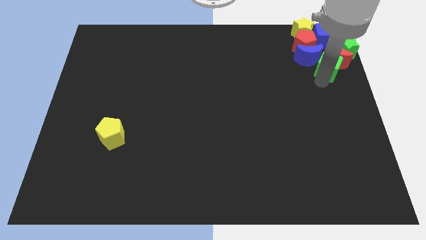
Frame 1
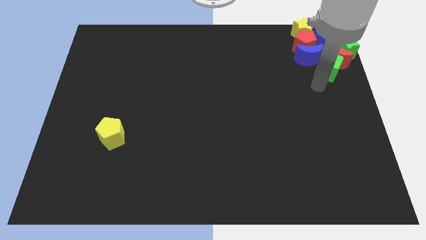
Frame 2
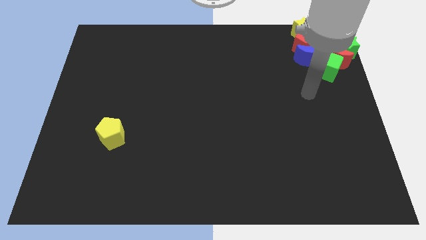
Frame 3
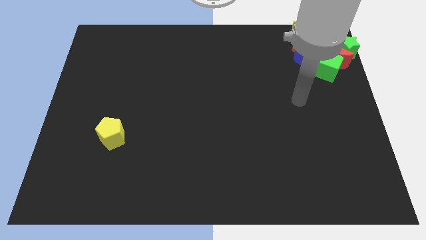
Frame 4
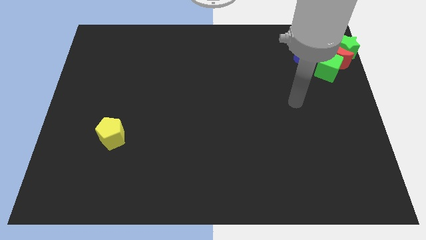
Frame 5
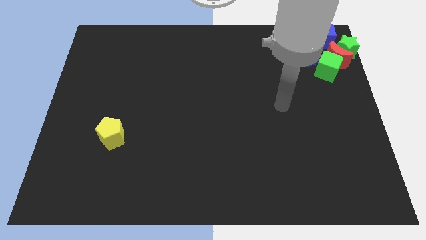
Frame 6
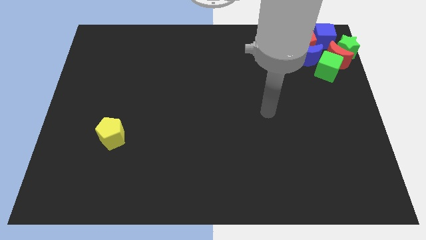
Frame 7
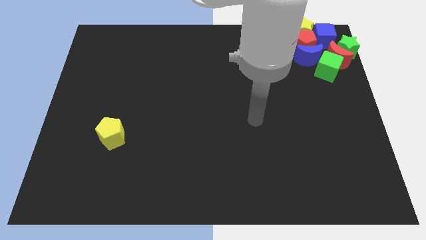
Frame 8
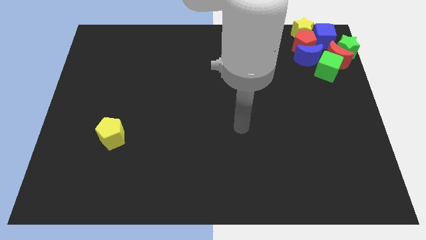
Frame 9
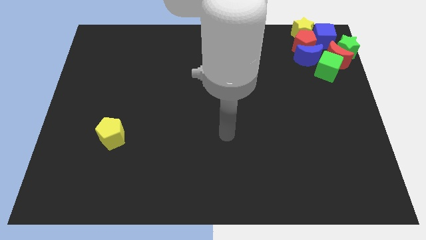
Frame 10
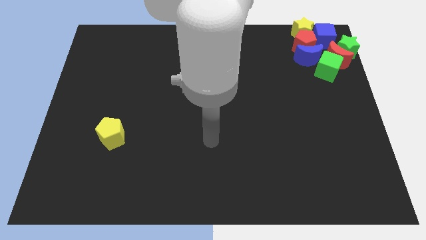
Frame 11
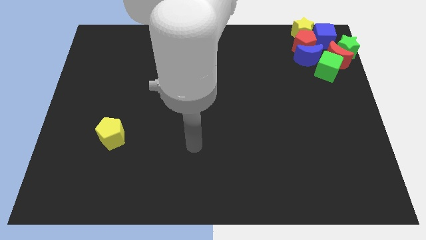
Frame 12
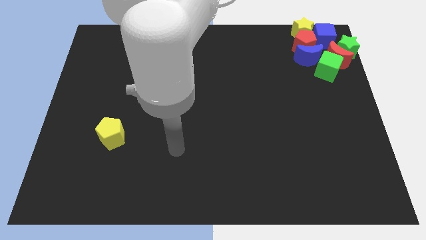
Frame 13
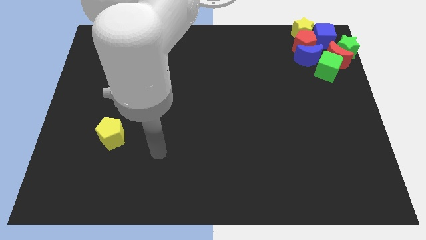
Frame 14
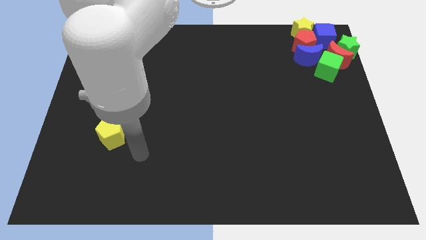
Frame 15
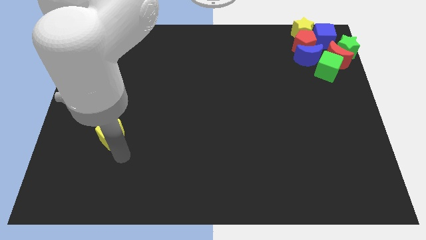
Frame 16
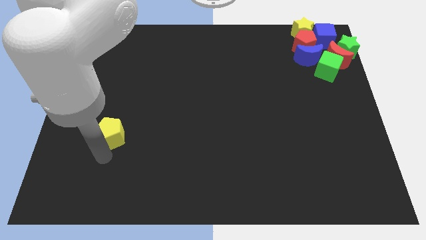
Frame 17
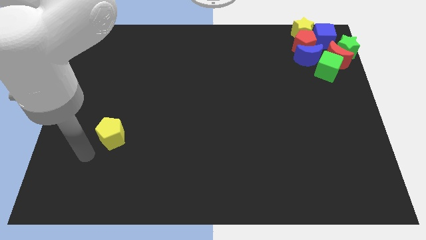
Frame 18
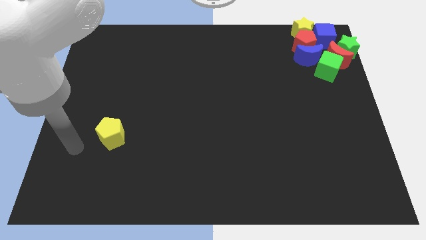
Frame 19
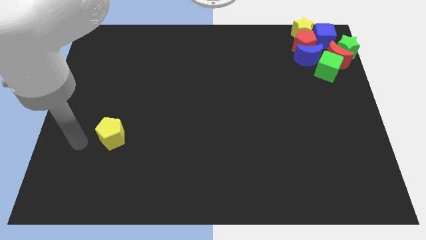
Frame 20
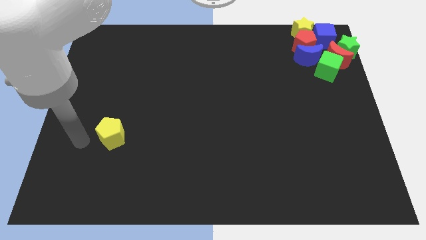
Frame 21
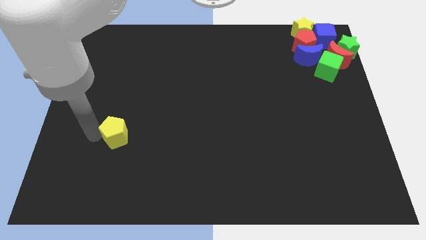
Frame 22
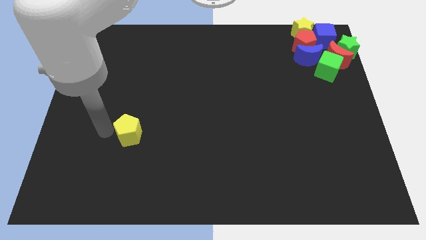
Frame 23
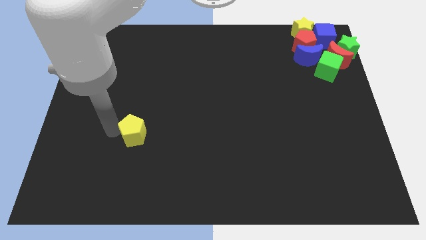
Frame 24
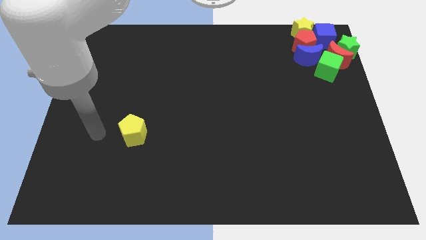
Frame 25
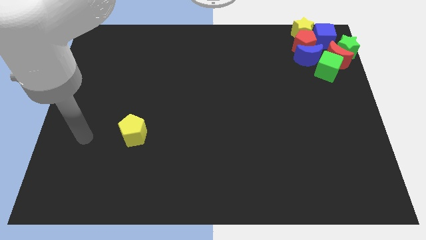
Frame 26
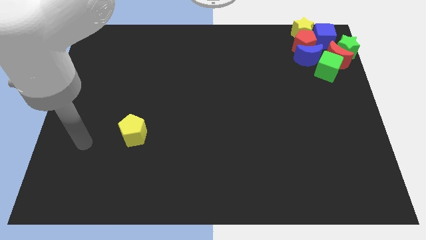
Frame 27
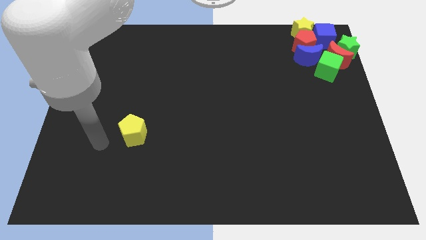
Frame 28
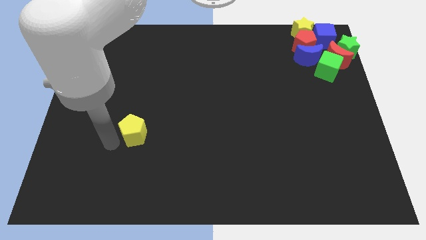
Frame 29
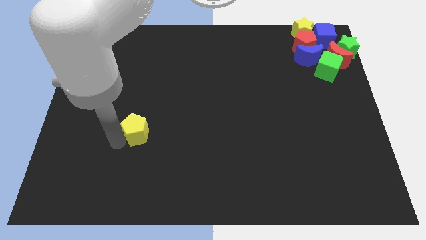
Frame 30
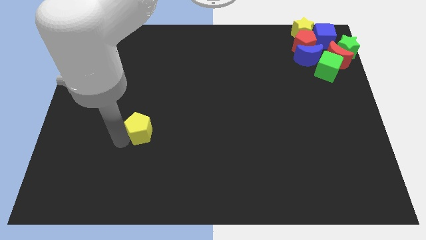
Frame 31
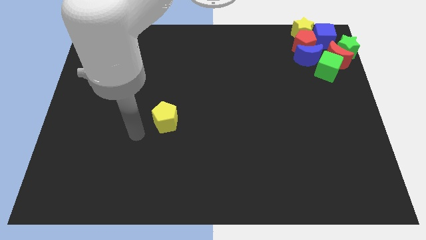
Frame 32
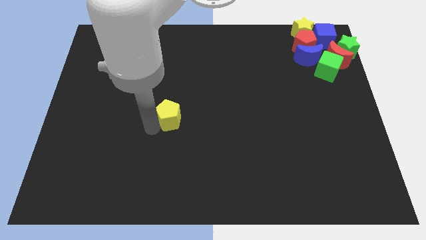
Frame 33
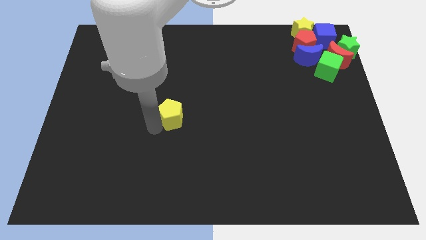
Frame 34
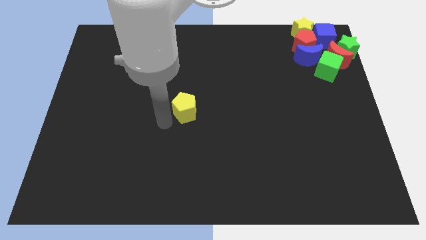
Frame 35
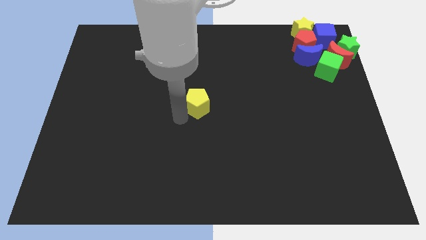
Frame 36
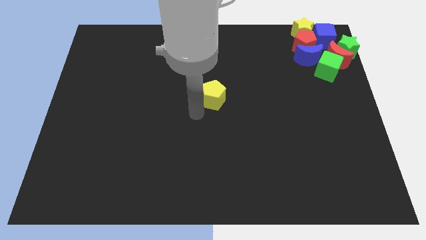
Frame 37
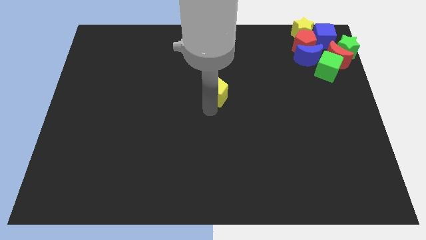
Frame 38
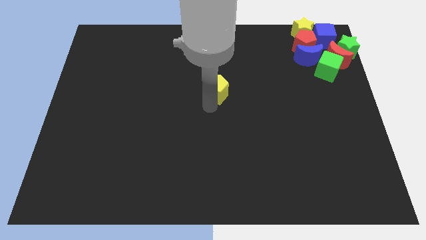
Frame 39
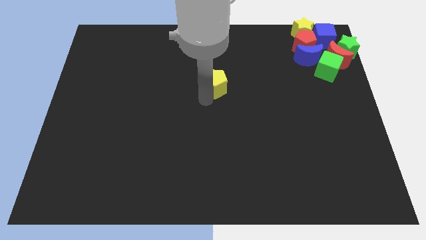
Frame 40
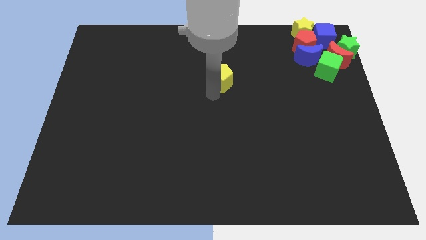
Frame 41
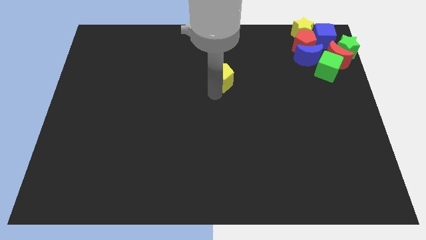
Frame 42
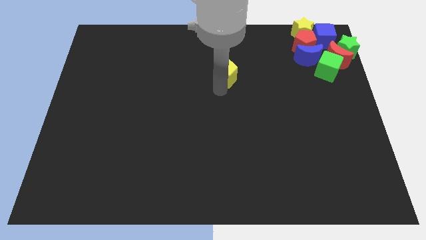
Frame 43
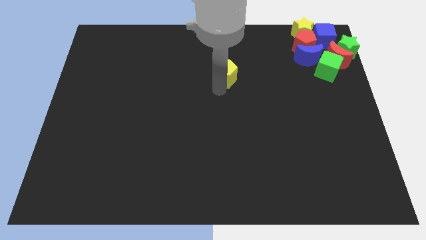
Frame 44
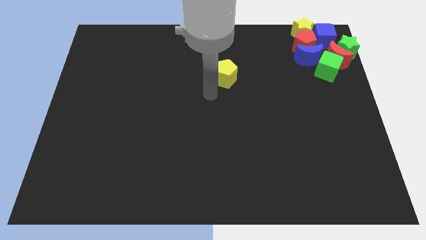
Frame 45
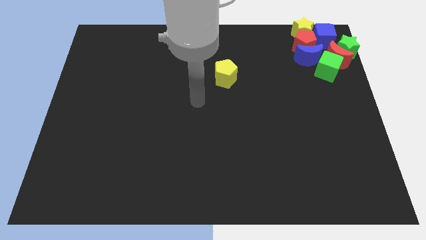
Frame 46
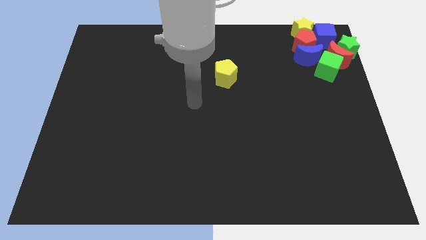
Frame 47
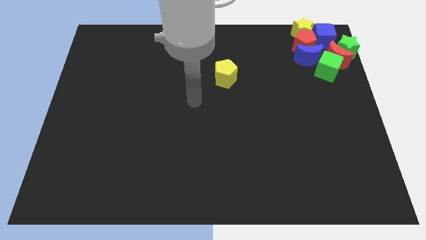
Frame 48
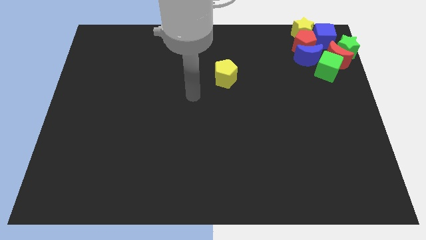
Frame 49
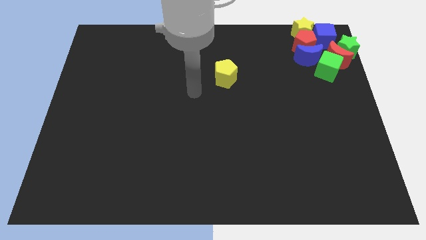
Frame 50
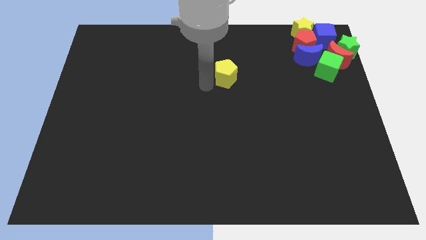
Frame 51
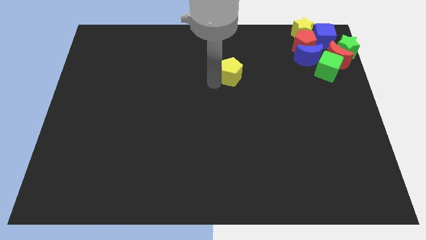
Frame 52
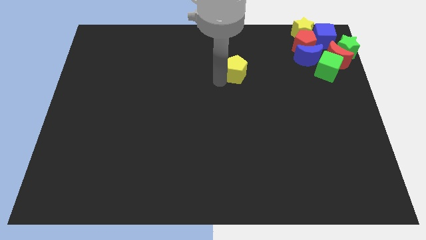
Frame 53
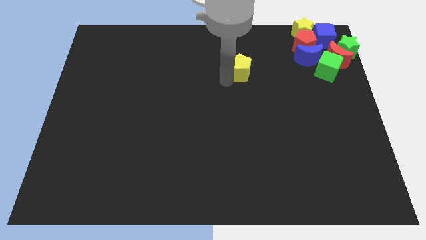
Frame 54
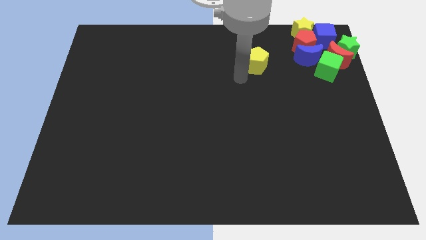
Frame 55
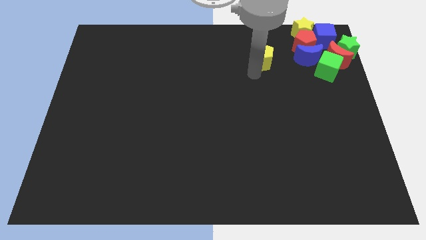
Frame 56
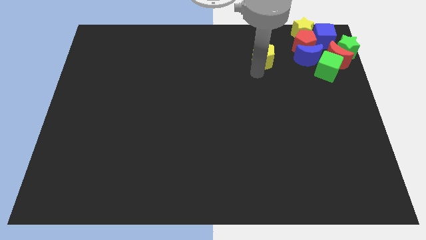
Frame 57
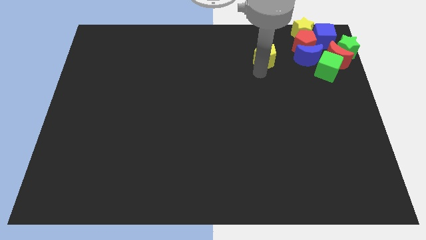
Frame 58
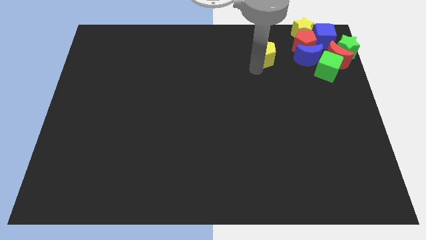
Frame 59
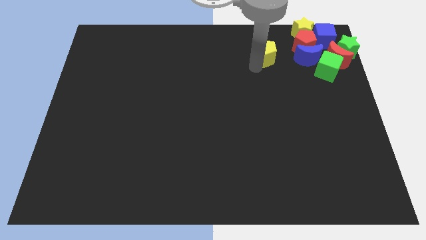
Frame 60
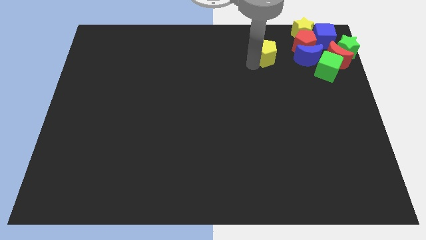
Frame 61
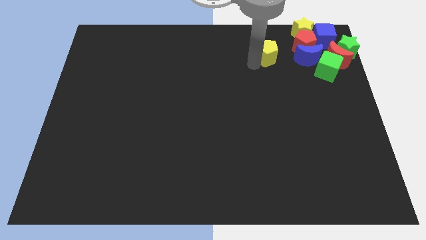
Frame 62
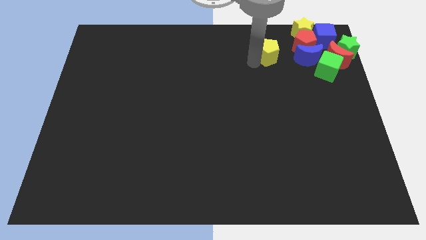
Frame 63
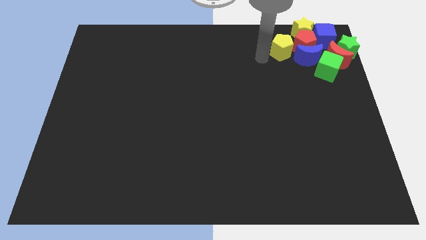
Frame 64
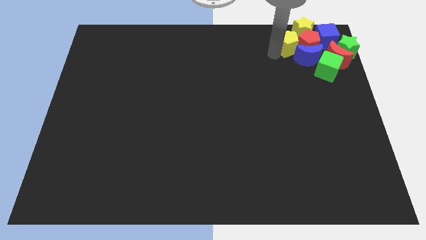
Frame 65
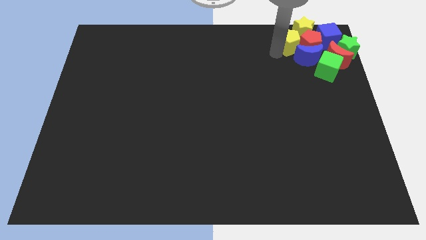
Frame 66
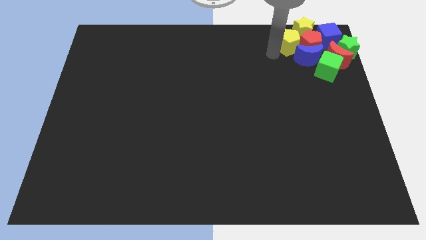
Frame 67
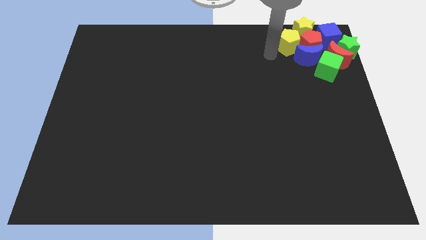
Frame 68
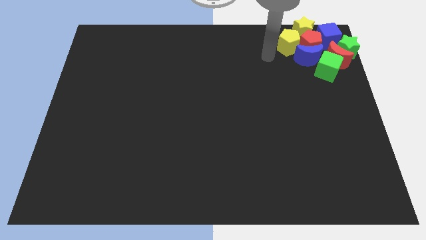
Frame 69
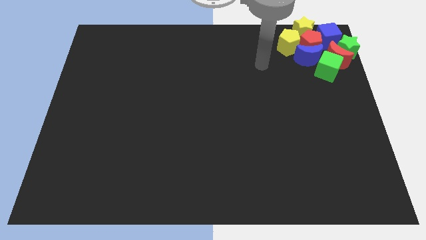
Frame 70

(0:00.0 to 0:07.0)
move the yellow pentagon near to the top of the yellow star

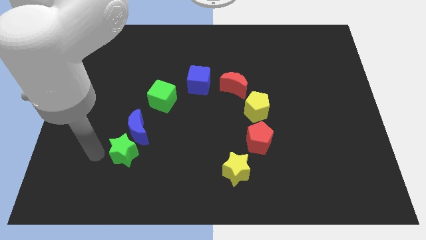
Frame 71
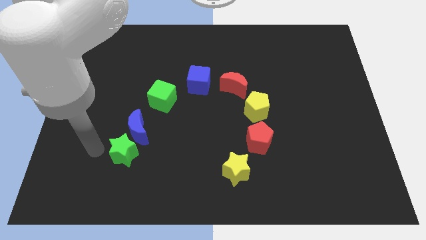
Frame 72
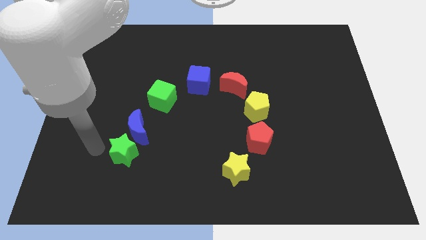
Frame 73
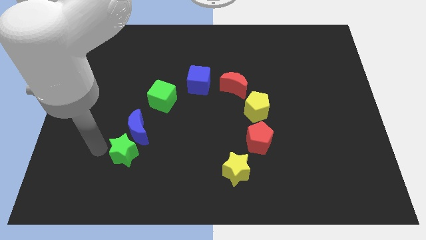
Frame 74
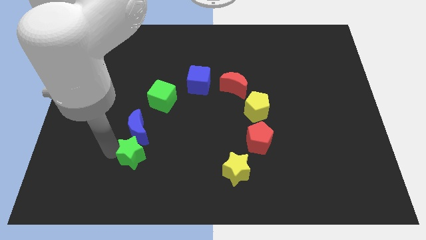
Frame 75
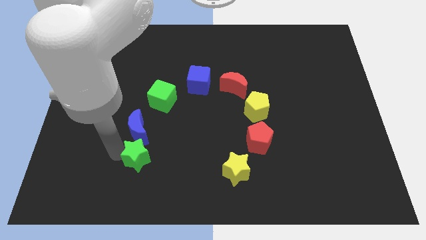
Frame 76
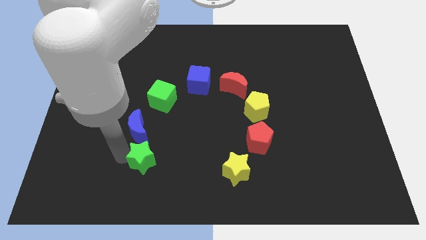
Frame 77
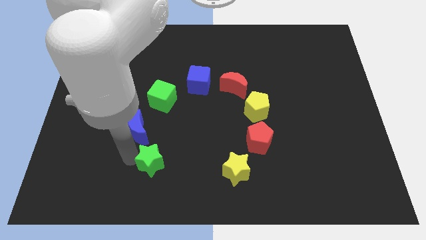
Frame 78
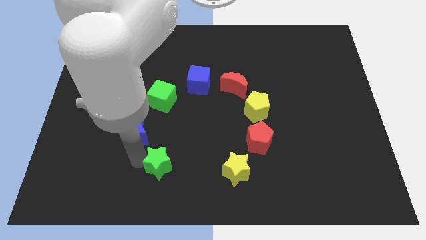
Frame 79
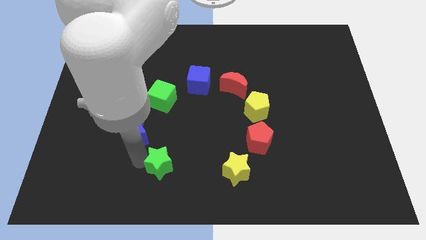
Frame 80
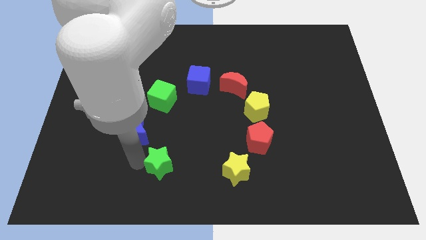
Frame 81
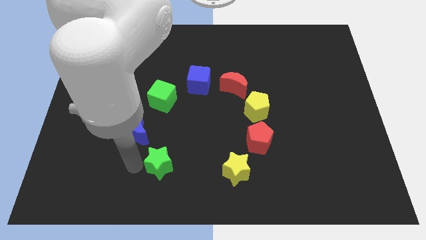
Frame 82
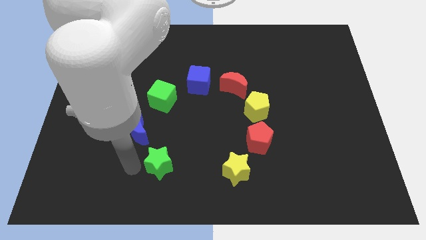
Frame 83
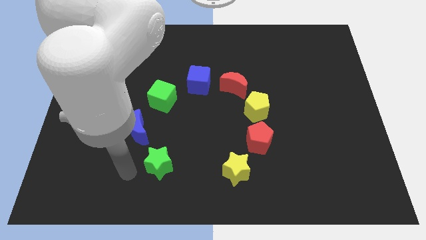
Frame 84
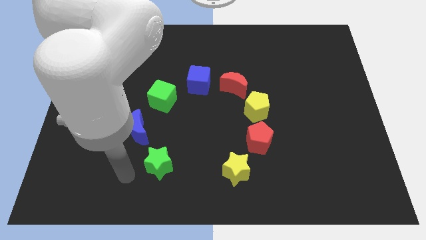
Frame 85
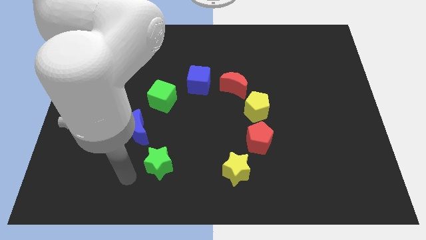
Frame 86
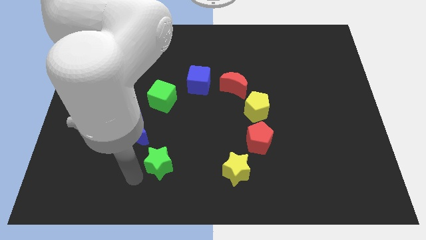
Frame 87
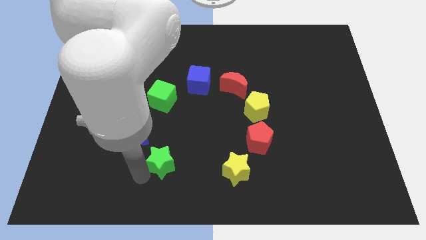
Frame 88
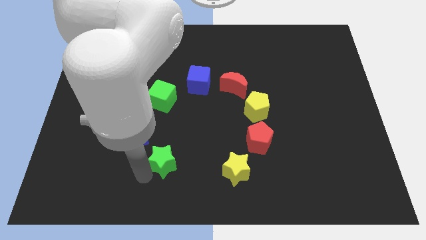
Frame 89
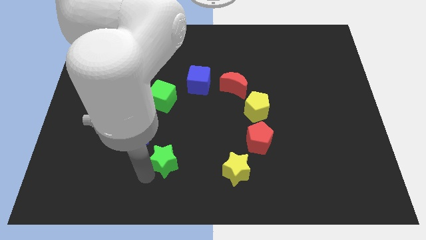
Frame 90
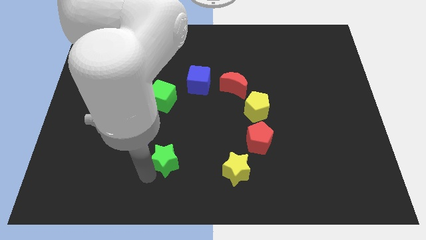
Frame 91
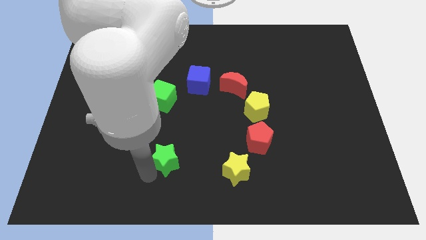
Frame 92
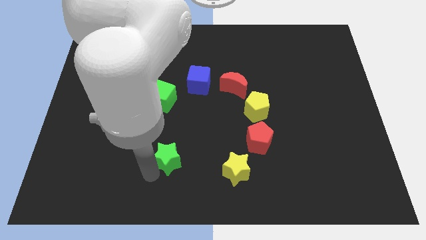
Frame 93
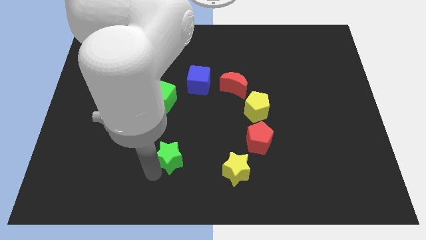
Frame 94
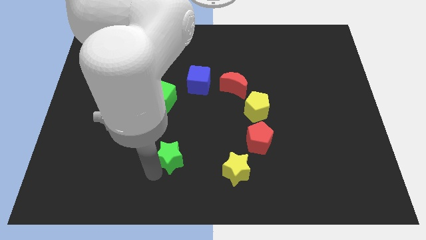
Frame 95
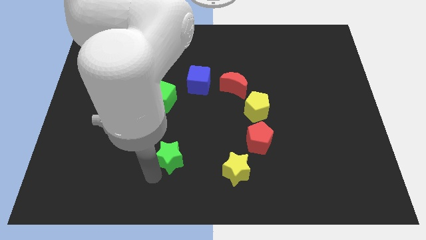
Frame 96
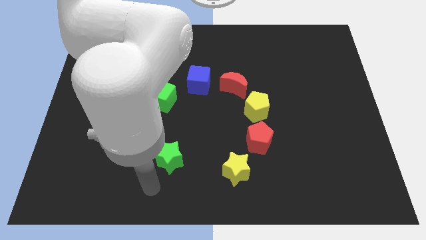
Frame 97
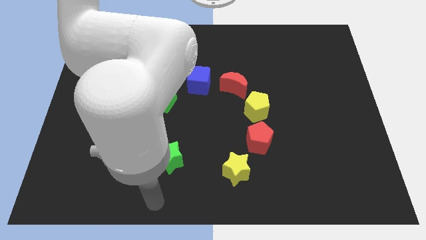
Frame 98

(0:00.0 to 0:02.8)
move the green star away from the blue moon
